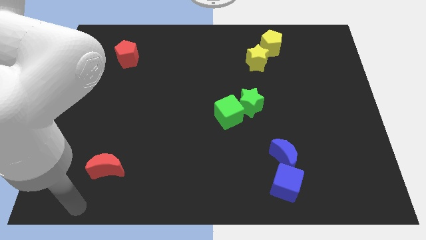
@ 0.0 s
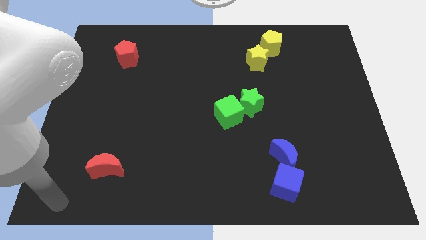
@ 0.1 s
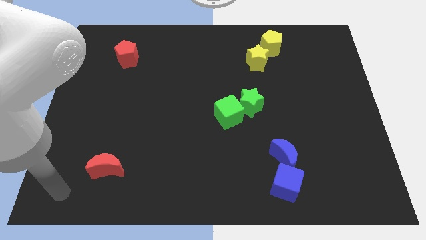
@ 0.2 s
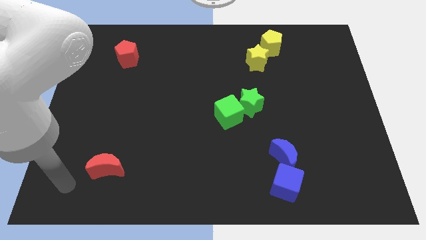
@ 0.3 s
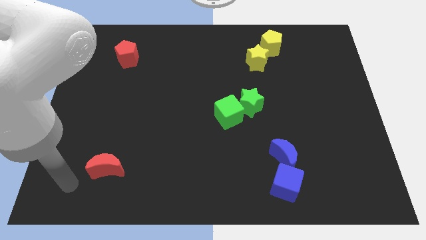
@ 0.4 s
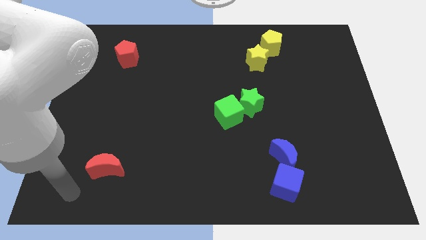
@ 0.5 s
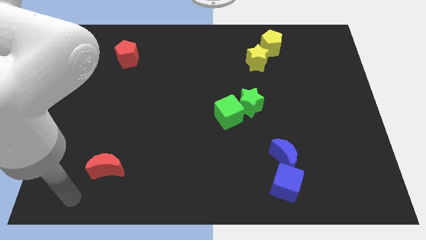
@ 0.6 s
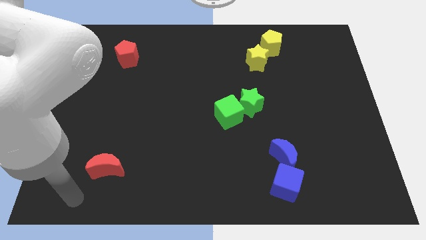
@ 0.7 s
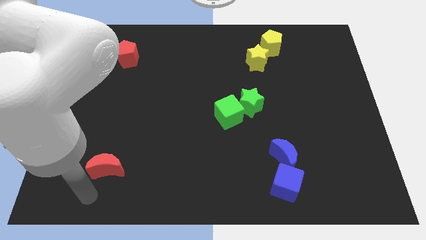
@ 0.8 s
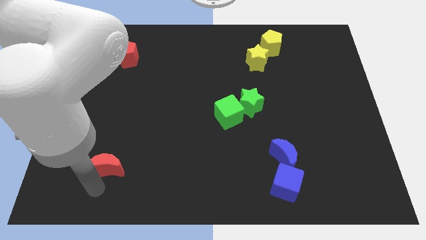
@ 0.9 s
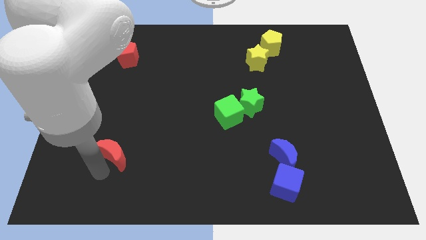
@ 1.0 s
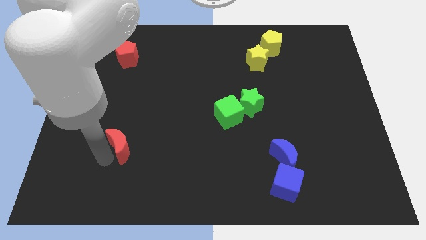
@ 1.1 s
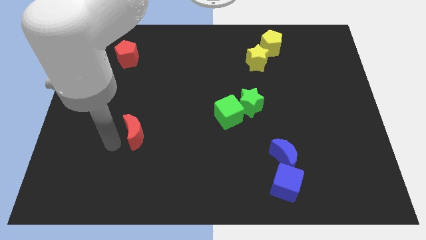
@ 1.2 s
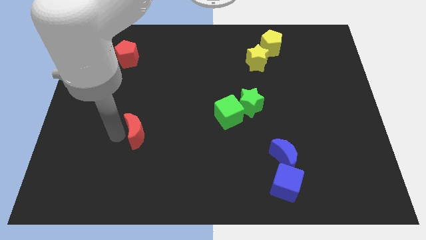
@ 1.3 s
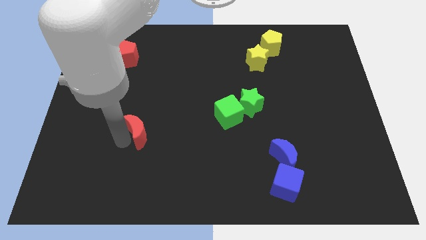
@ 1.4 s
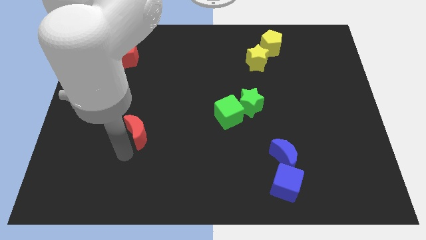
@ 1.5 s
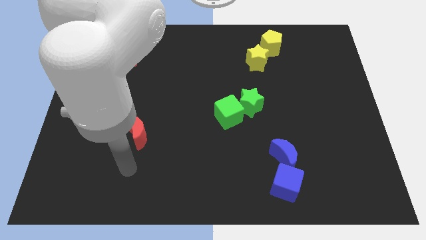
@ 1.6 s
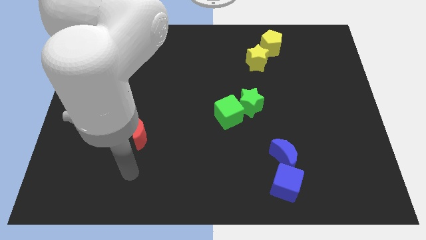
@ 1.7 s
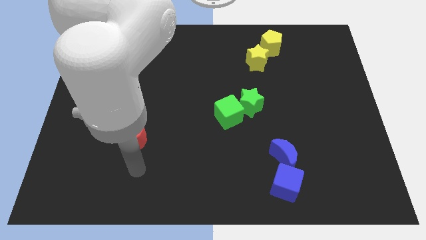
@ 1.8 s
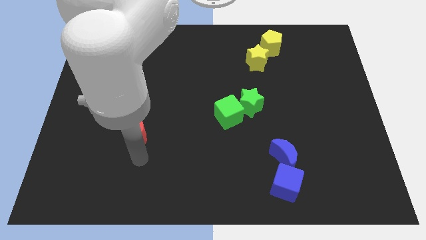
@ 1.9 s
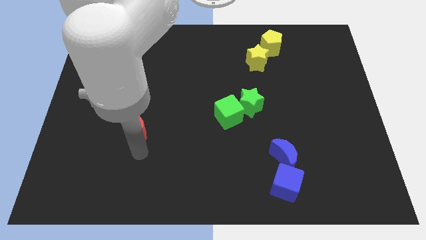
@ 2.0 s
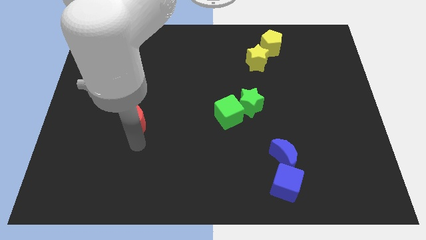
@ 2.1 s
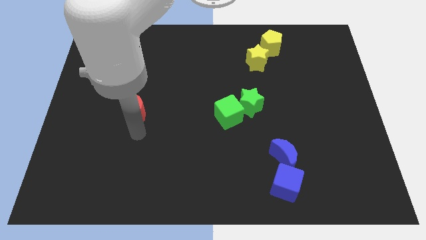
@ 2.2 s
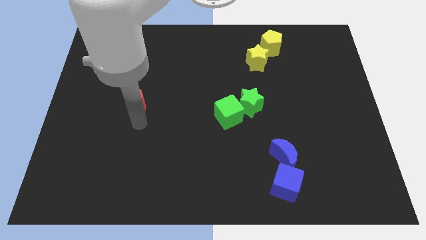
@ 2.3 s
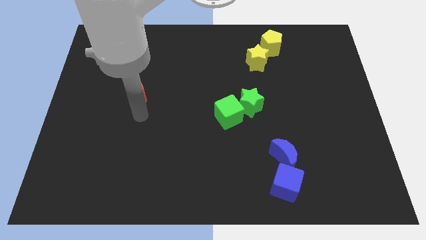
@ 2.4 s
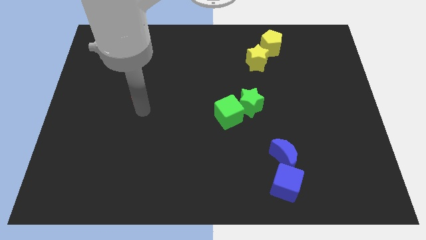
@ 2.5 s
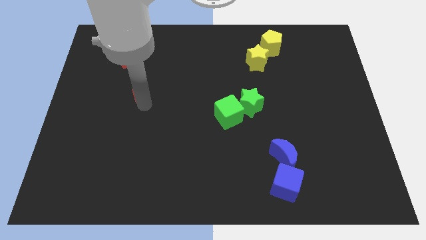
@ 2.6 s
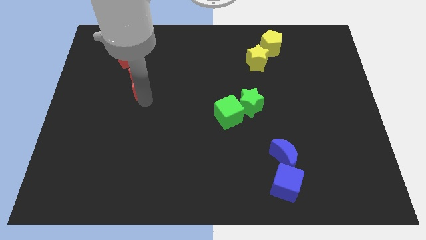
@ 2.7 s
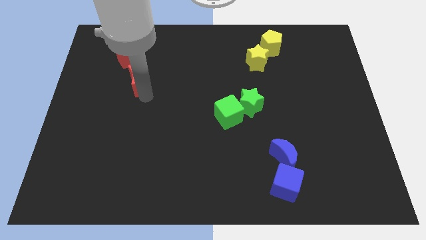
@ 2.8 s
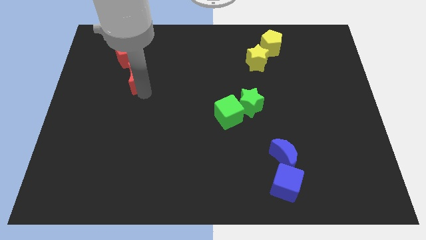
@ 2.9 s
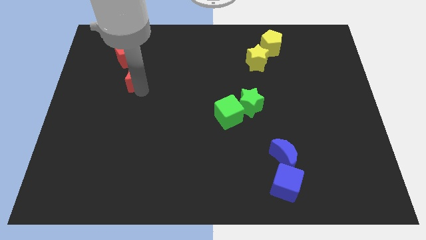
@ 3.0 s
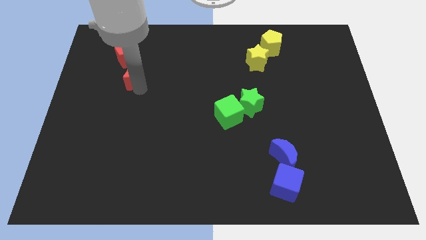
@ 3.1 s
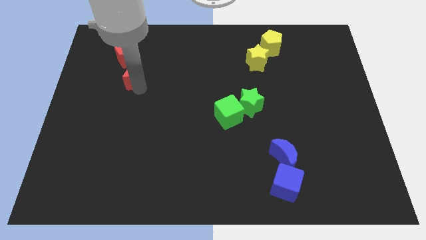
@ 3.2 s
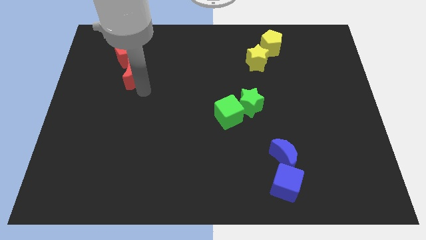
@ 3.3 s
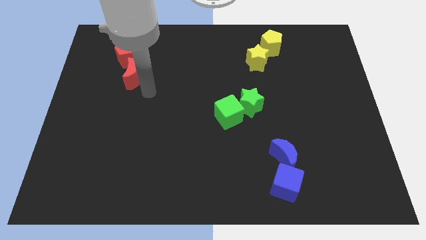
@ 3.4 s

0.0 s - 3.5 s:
slide the red crescent into the bottom side of the red pentagon

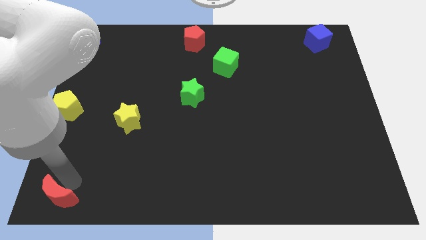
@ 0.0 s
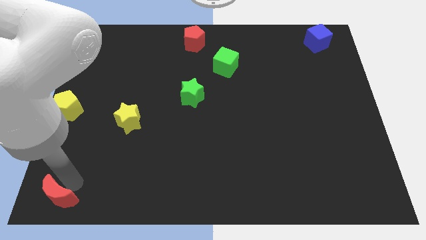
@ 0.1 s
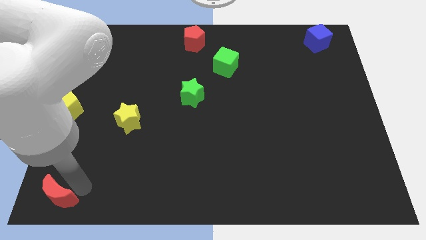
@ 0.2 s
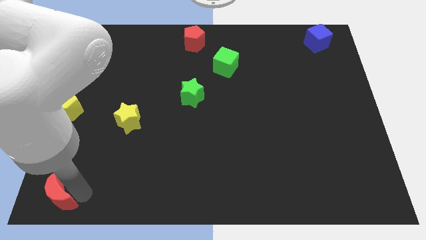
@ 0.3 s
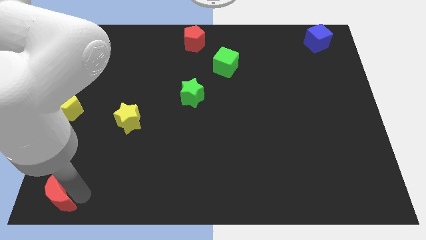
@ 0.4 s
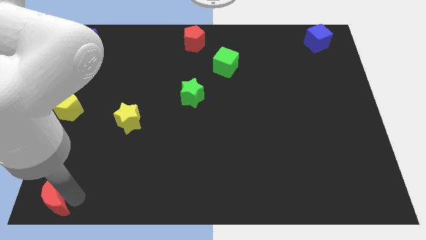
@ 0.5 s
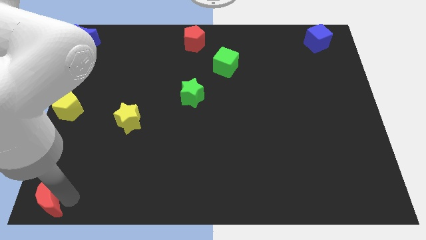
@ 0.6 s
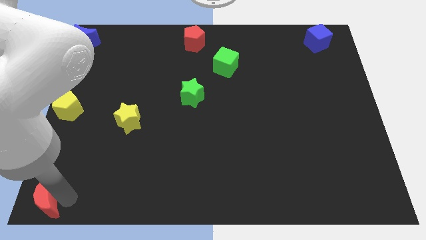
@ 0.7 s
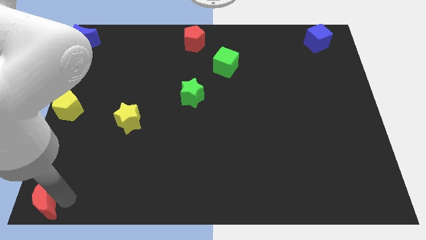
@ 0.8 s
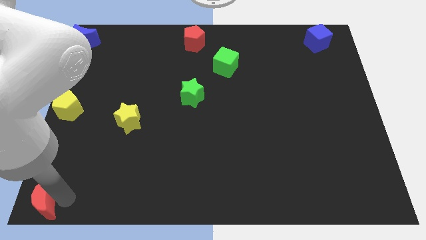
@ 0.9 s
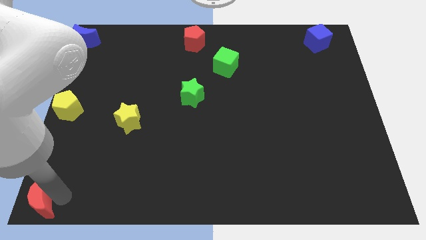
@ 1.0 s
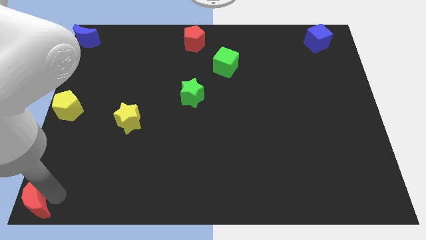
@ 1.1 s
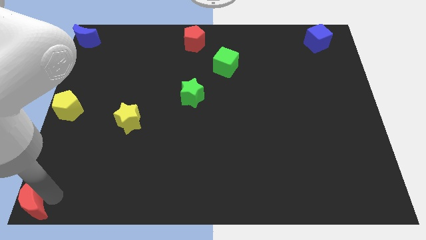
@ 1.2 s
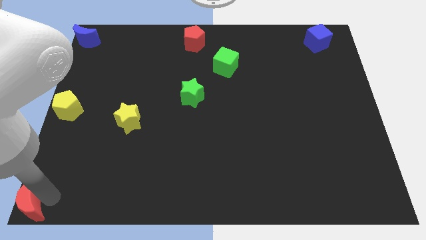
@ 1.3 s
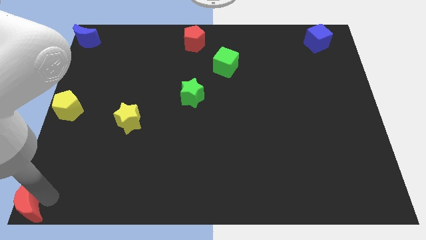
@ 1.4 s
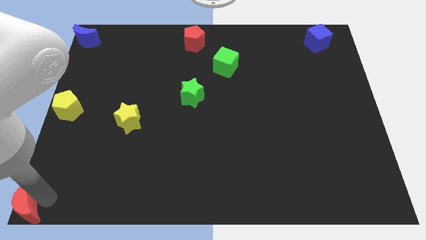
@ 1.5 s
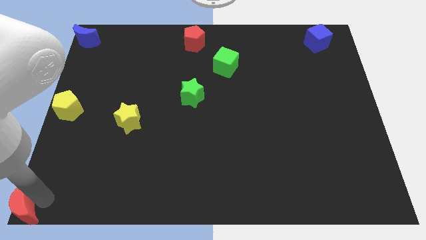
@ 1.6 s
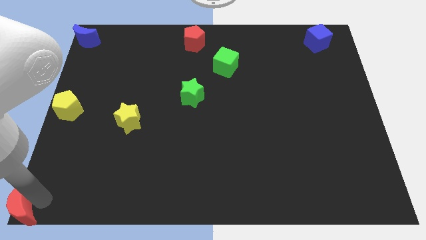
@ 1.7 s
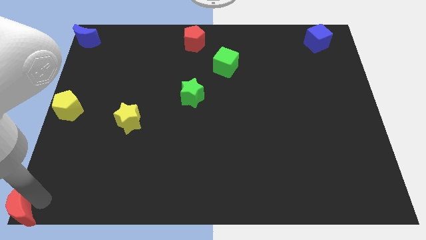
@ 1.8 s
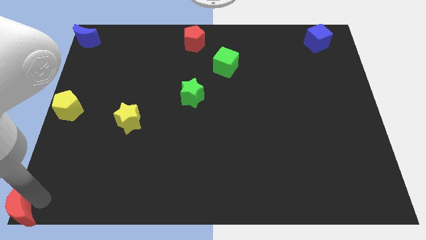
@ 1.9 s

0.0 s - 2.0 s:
place the red crescent at the bottom left corner

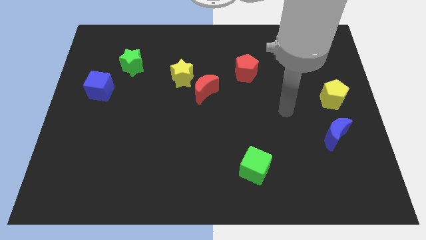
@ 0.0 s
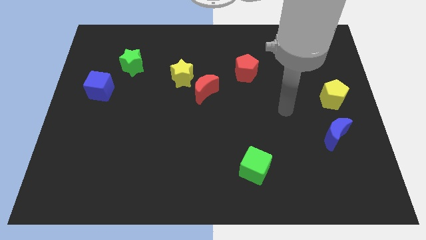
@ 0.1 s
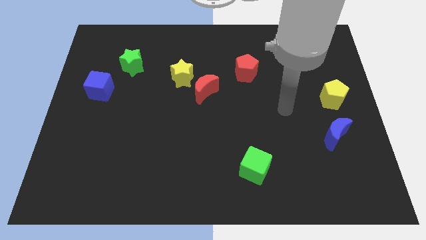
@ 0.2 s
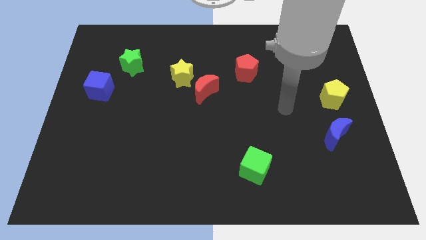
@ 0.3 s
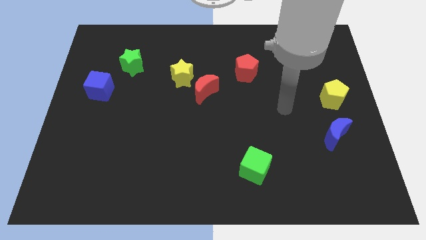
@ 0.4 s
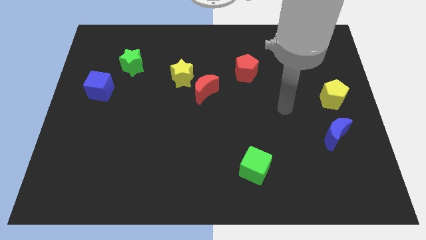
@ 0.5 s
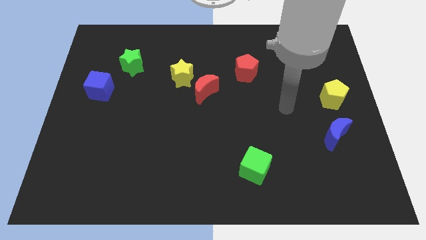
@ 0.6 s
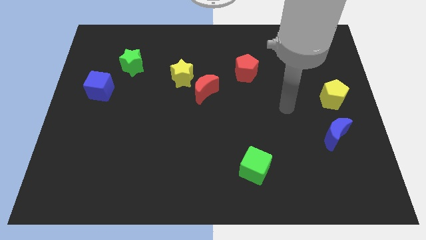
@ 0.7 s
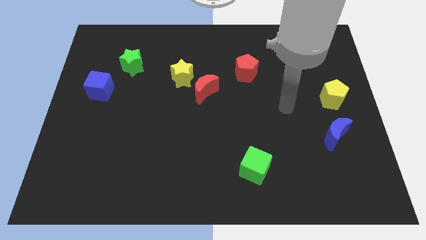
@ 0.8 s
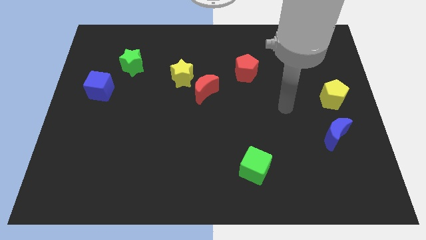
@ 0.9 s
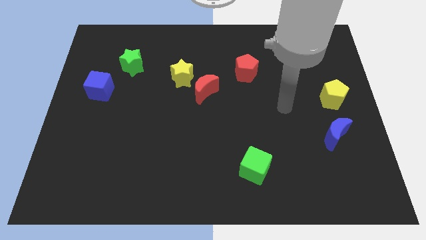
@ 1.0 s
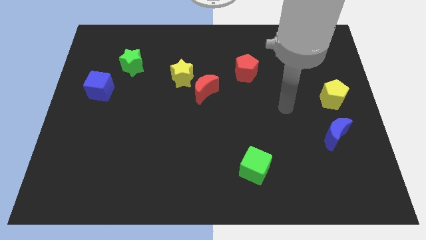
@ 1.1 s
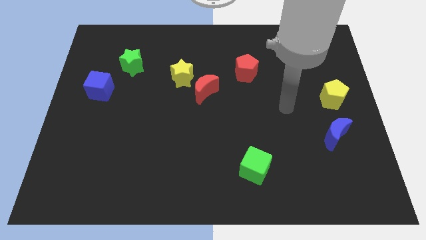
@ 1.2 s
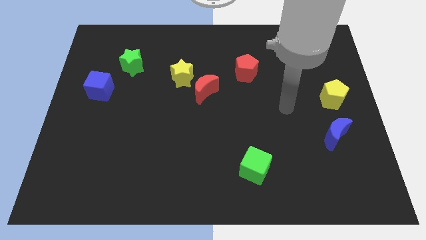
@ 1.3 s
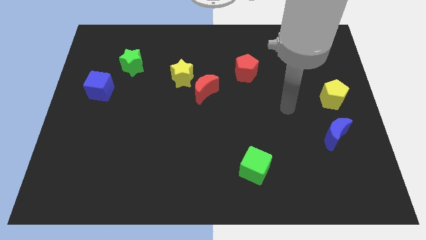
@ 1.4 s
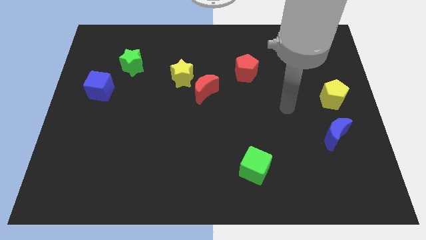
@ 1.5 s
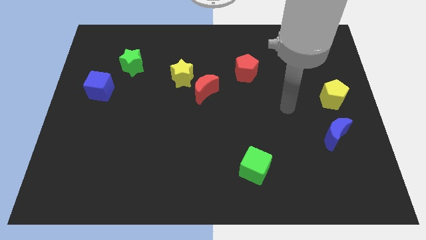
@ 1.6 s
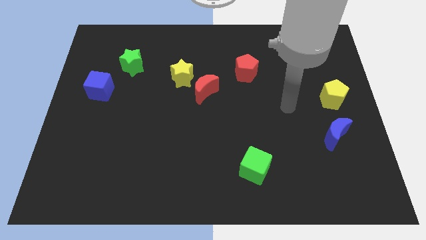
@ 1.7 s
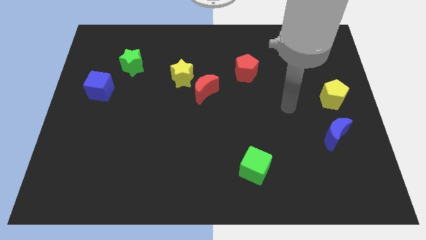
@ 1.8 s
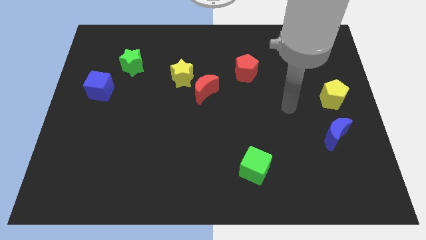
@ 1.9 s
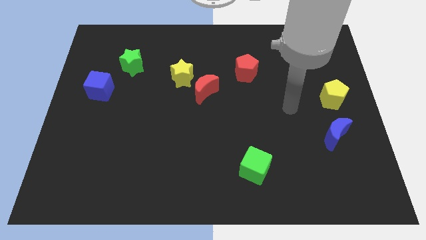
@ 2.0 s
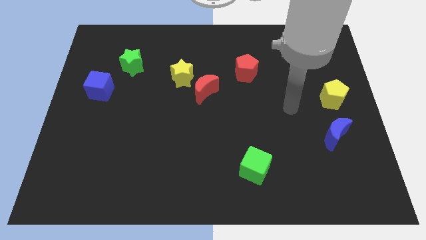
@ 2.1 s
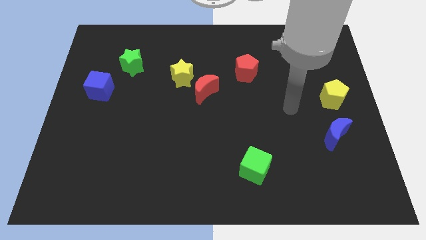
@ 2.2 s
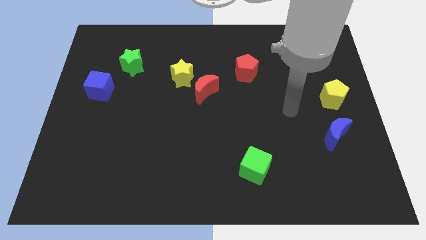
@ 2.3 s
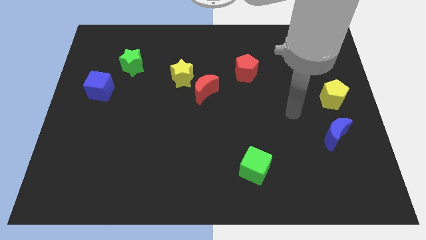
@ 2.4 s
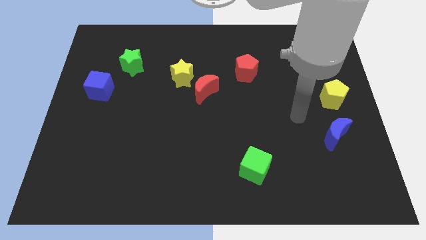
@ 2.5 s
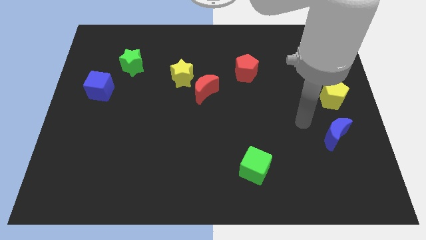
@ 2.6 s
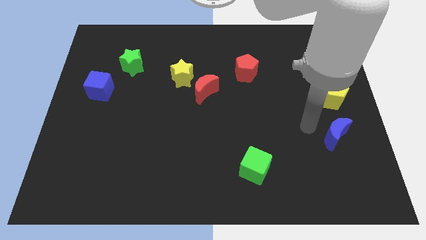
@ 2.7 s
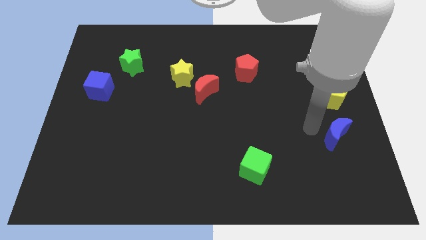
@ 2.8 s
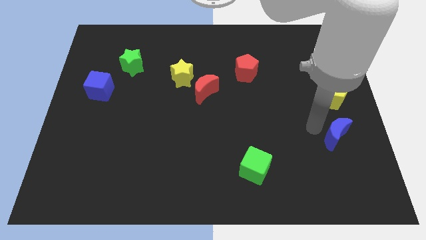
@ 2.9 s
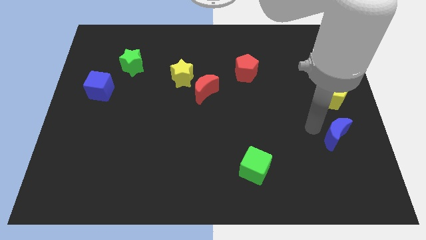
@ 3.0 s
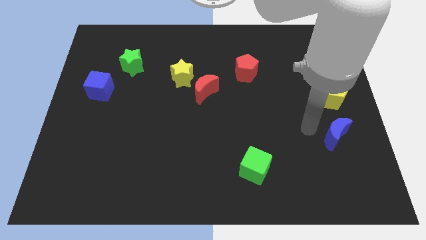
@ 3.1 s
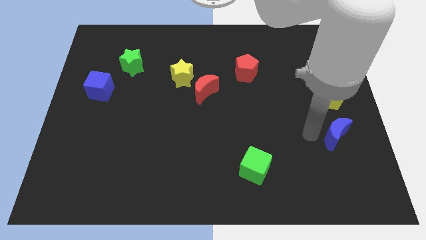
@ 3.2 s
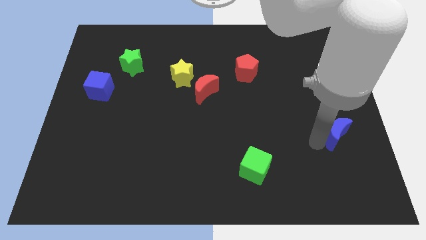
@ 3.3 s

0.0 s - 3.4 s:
move the arm left to the blue moon

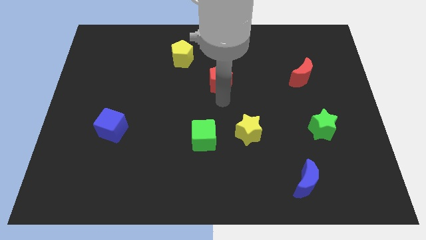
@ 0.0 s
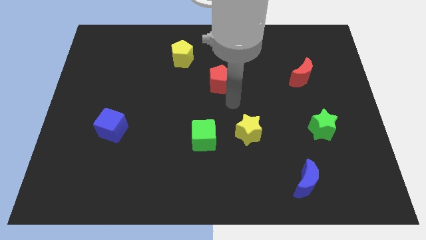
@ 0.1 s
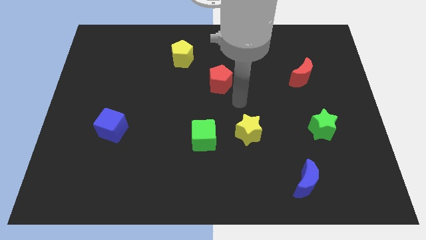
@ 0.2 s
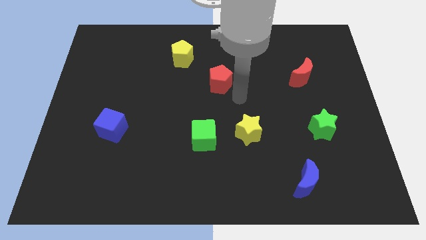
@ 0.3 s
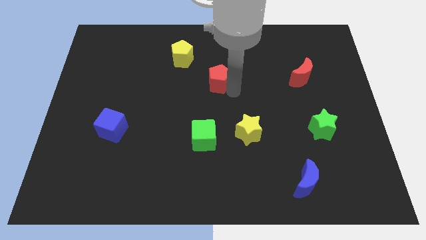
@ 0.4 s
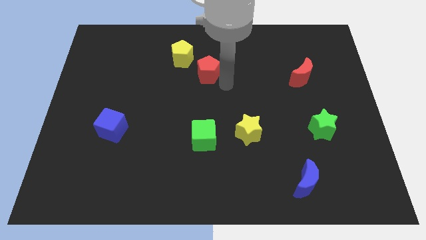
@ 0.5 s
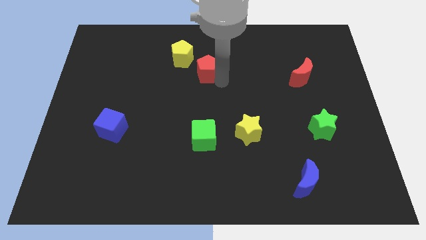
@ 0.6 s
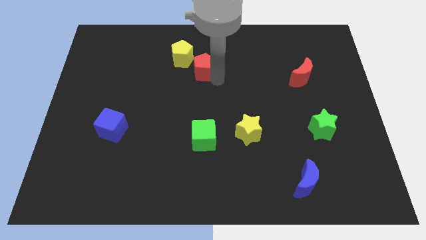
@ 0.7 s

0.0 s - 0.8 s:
move the red pentagon close to the yellow pentagon
